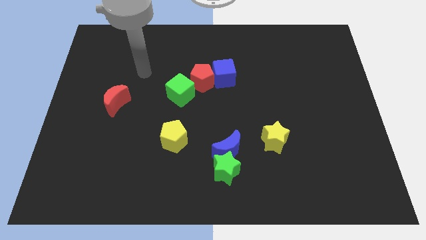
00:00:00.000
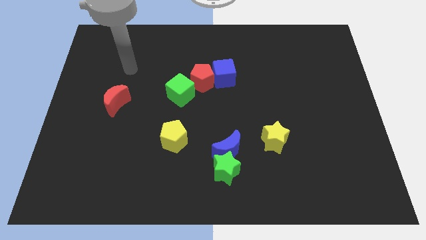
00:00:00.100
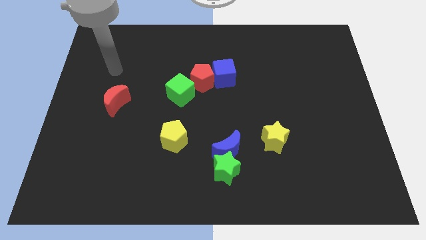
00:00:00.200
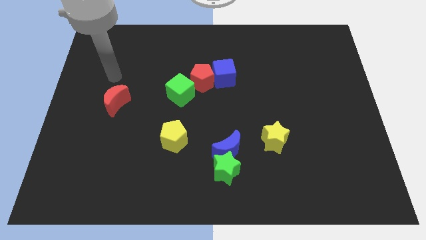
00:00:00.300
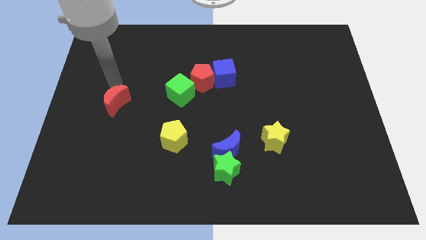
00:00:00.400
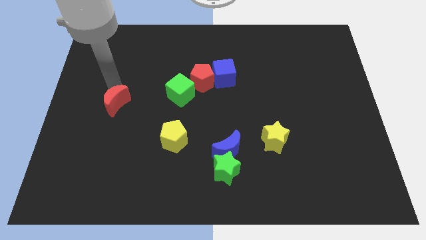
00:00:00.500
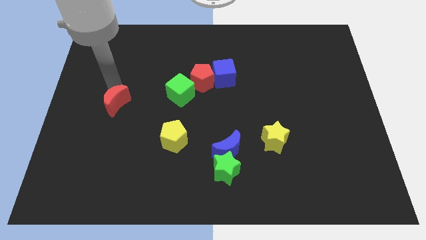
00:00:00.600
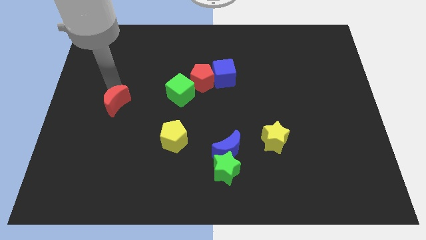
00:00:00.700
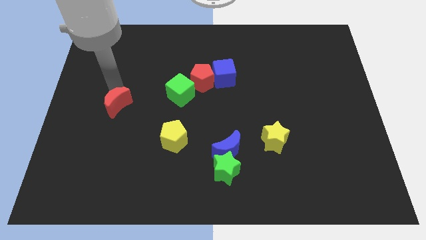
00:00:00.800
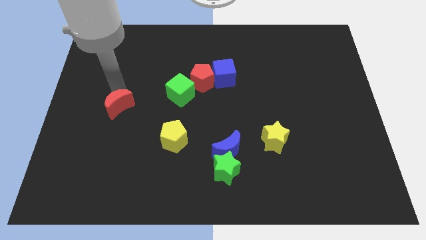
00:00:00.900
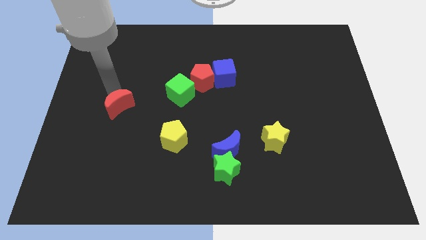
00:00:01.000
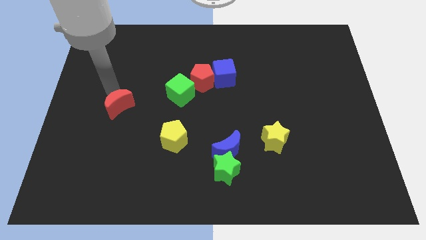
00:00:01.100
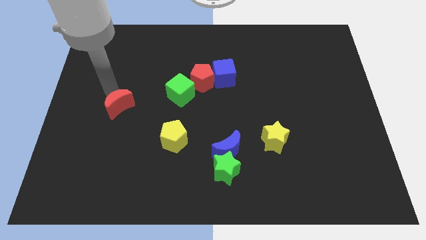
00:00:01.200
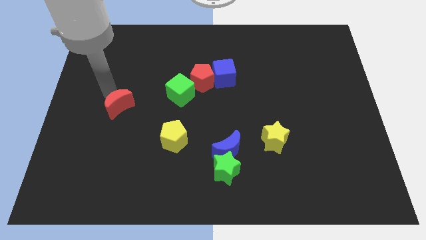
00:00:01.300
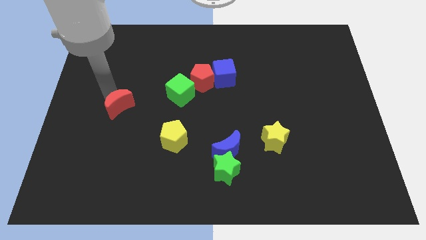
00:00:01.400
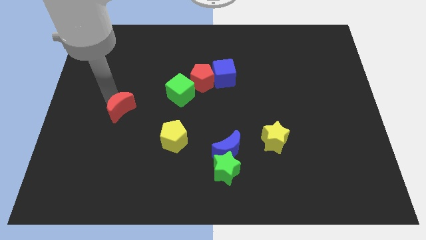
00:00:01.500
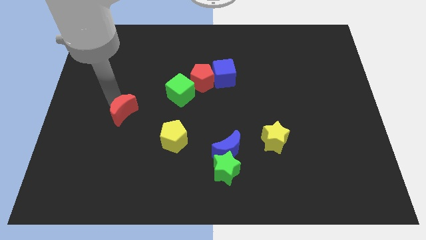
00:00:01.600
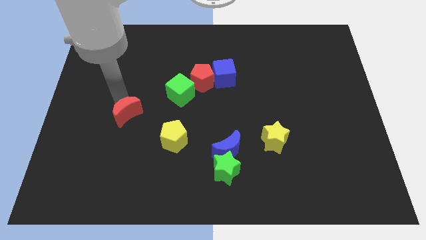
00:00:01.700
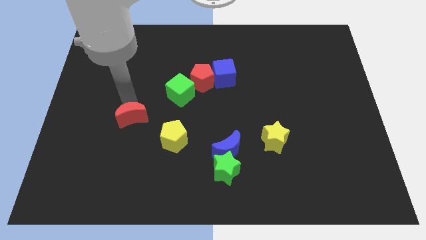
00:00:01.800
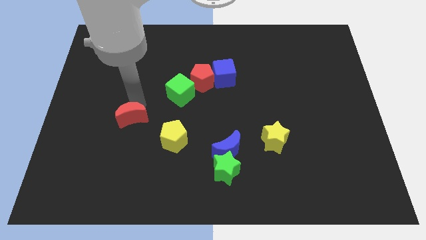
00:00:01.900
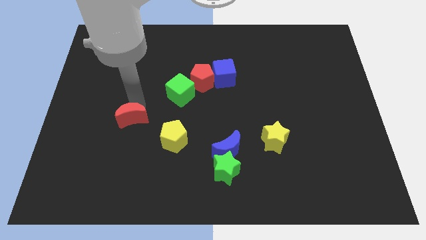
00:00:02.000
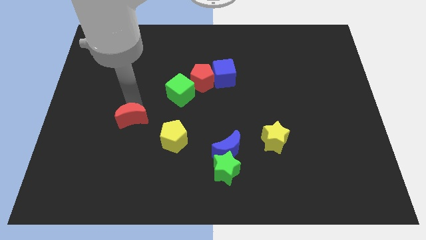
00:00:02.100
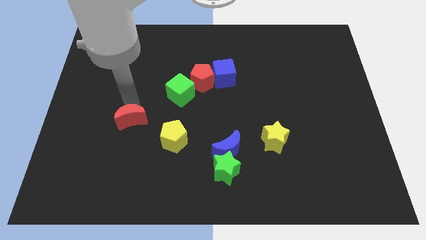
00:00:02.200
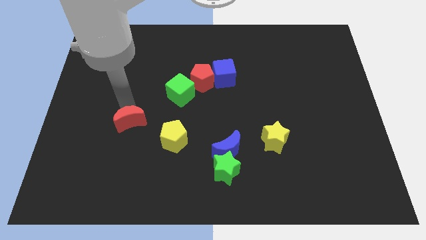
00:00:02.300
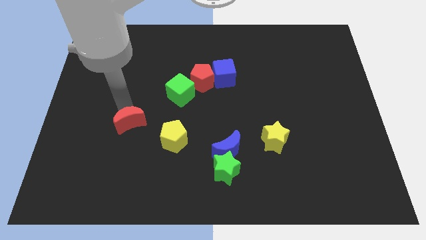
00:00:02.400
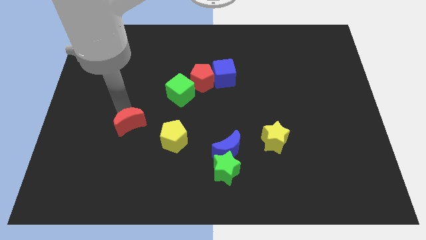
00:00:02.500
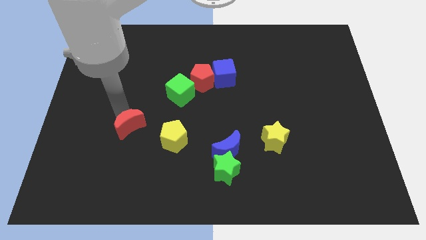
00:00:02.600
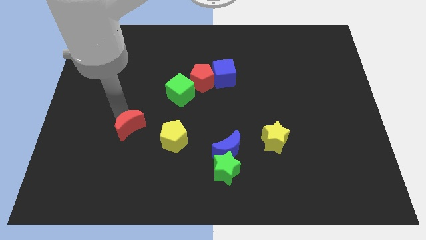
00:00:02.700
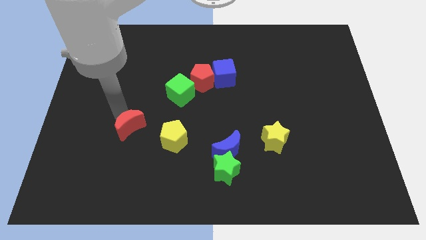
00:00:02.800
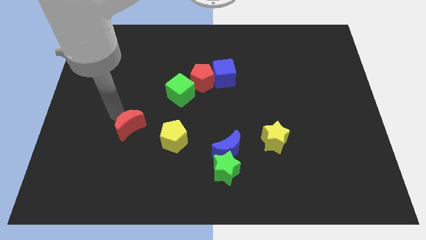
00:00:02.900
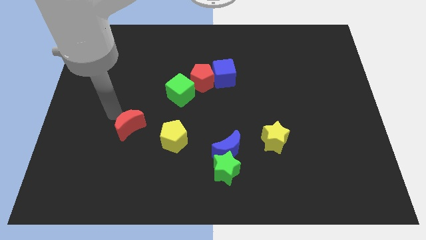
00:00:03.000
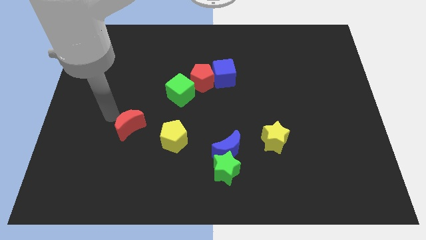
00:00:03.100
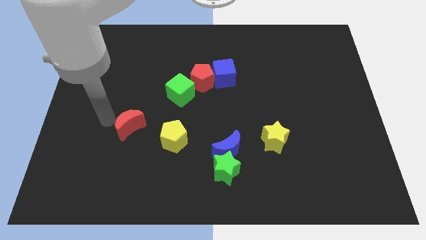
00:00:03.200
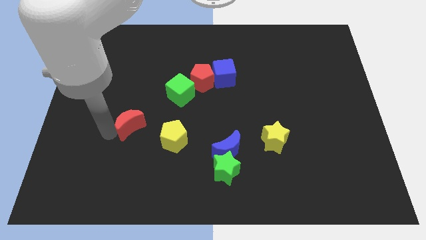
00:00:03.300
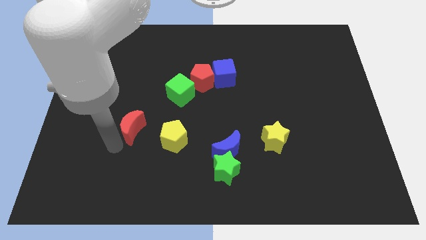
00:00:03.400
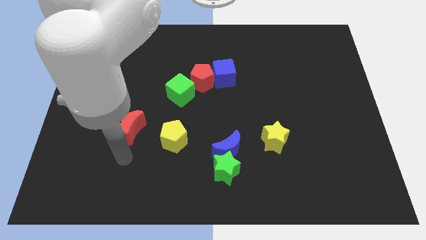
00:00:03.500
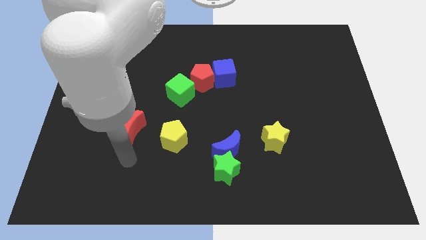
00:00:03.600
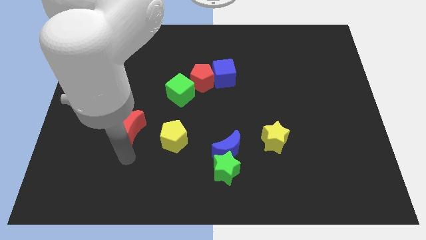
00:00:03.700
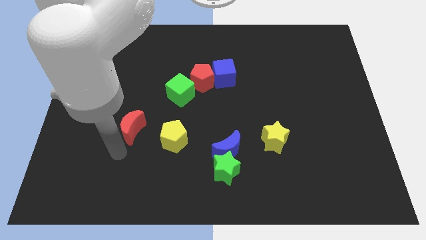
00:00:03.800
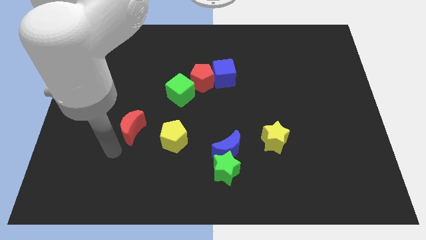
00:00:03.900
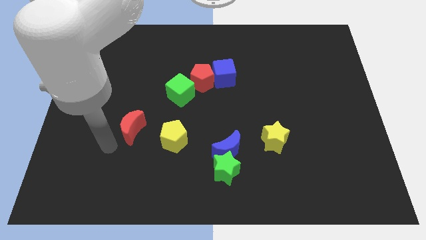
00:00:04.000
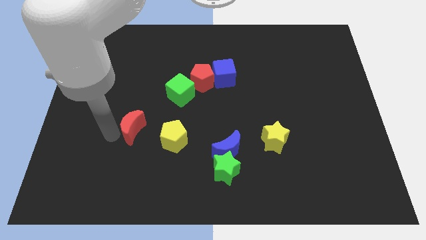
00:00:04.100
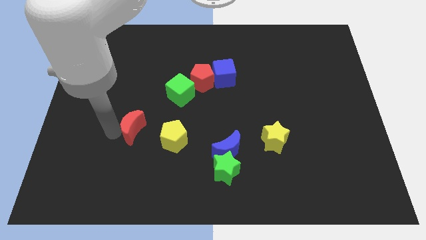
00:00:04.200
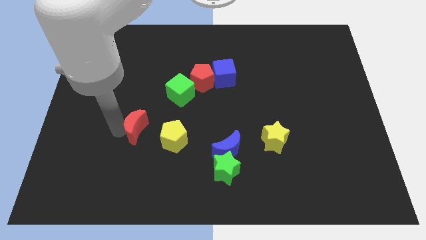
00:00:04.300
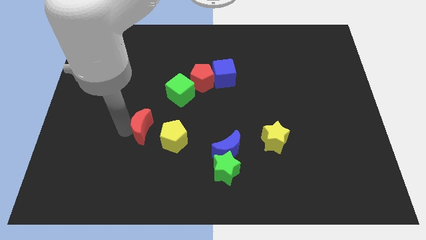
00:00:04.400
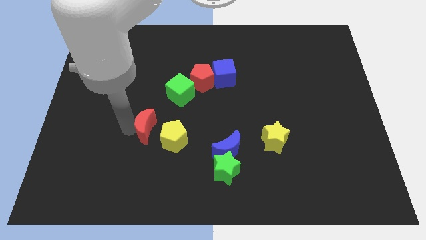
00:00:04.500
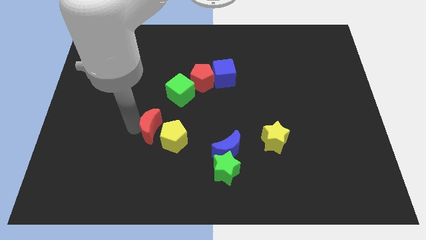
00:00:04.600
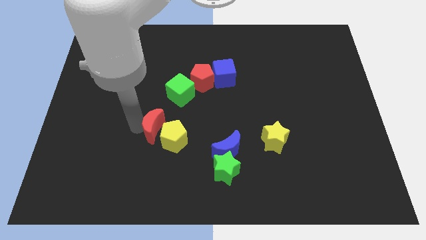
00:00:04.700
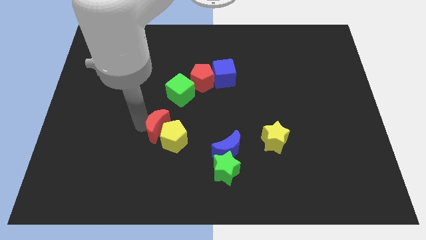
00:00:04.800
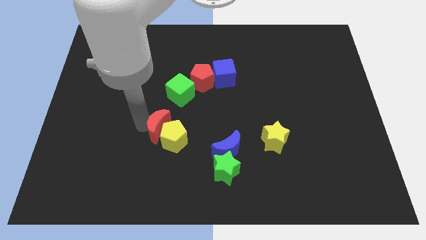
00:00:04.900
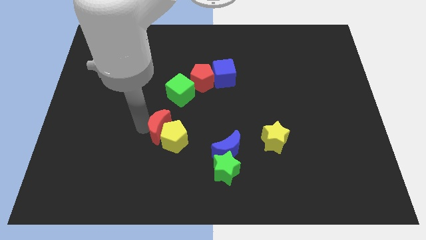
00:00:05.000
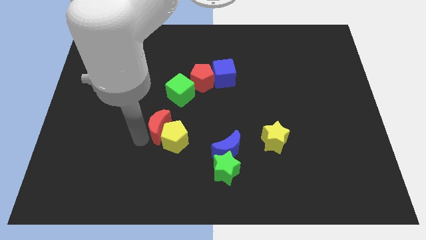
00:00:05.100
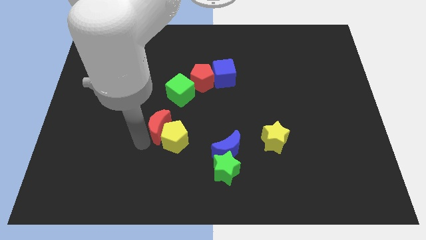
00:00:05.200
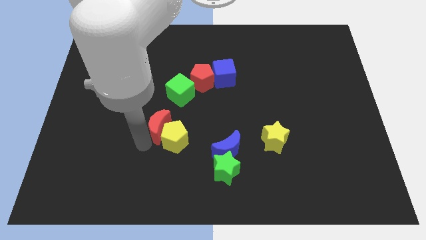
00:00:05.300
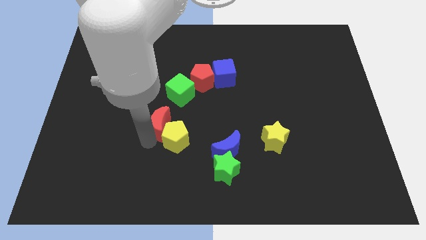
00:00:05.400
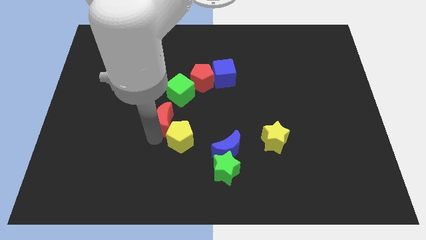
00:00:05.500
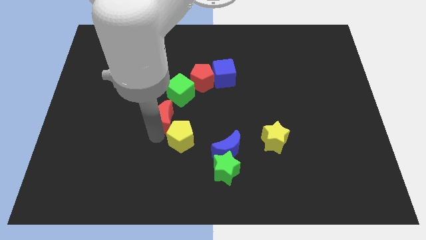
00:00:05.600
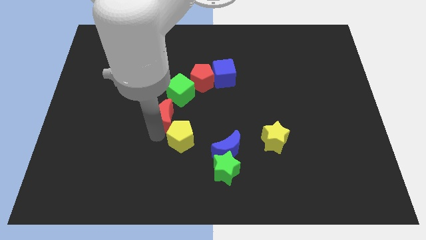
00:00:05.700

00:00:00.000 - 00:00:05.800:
push the red moon into the yellow pentagon

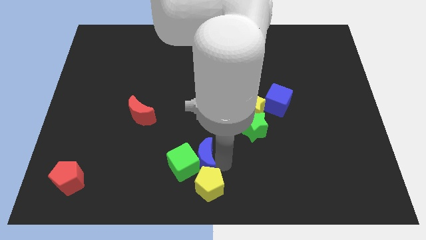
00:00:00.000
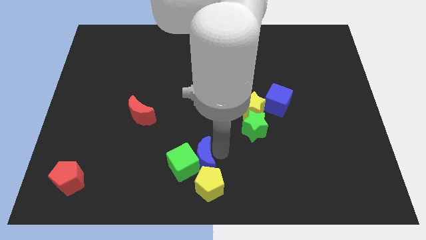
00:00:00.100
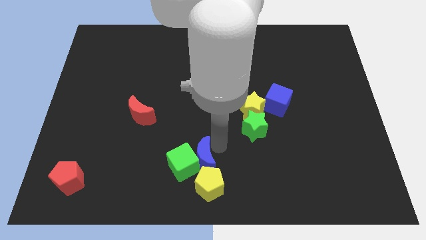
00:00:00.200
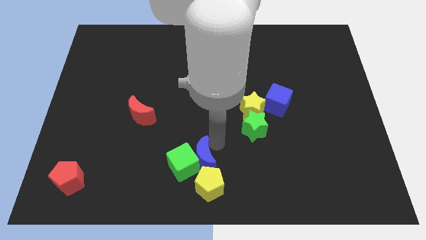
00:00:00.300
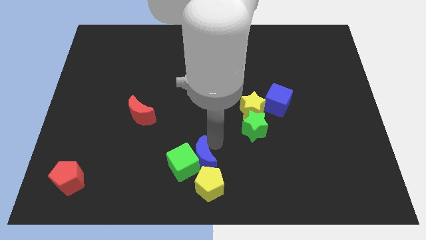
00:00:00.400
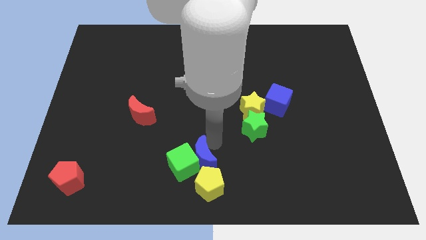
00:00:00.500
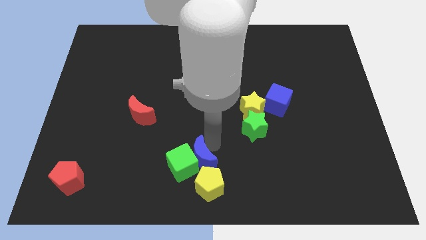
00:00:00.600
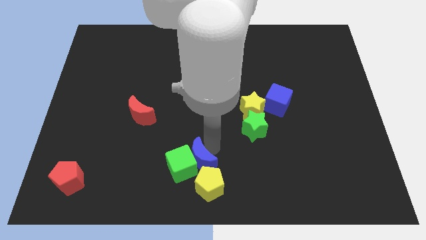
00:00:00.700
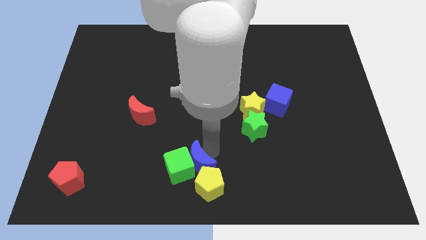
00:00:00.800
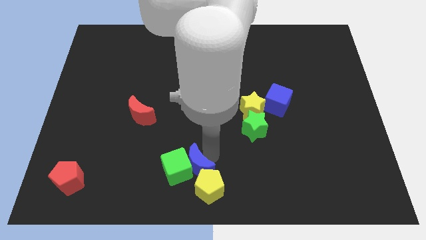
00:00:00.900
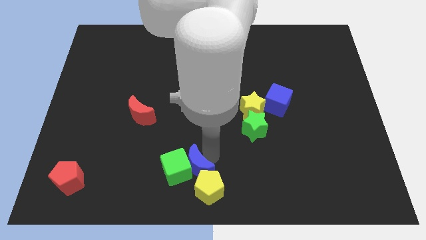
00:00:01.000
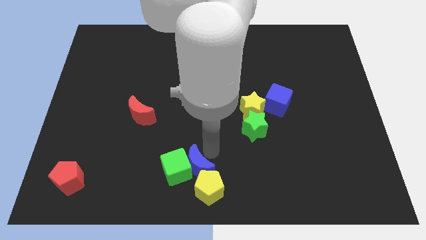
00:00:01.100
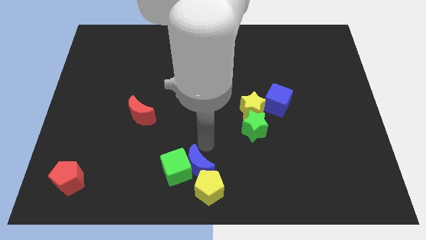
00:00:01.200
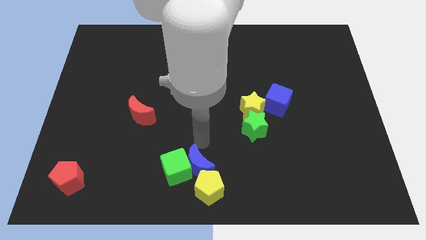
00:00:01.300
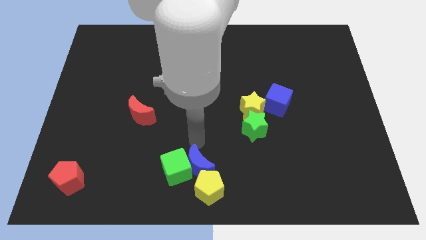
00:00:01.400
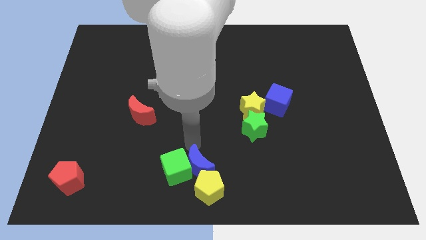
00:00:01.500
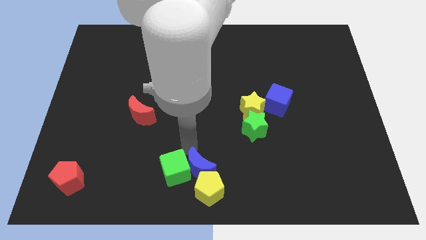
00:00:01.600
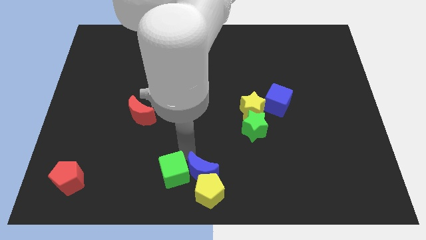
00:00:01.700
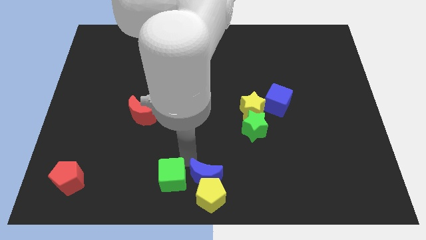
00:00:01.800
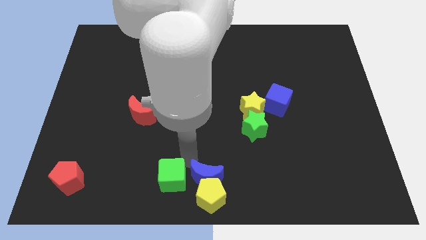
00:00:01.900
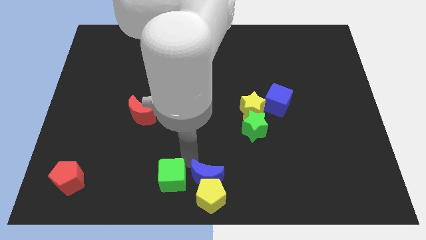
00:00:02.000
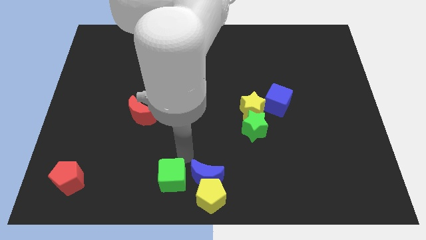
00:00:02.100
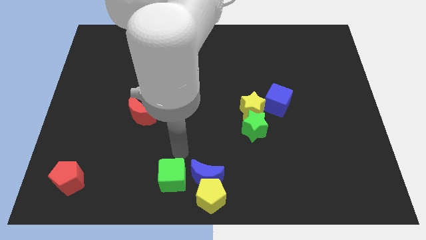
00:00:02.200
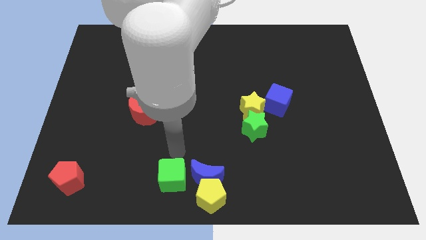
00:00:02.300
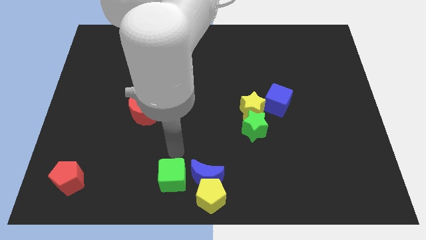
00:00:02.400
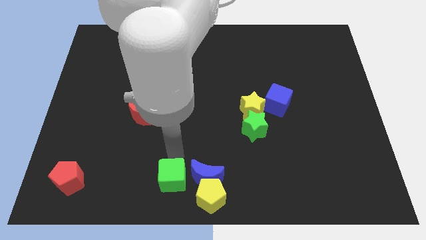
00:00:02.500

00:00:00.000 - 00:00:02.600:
place the arm above the green cube

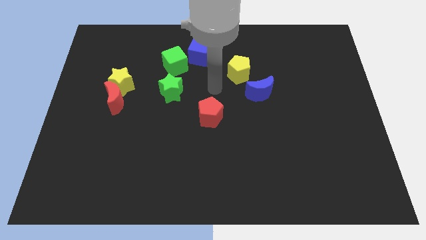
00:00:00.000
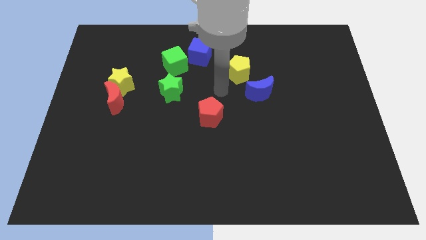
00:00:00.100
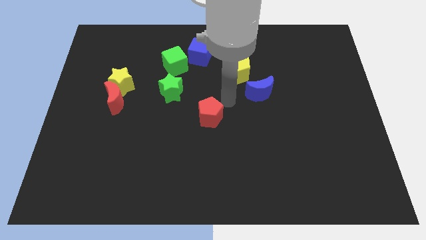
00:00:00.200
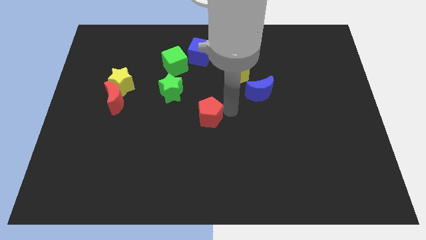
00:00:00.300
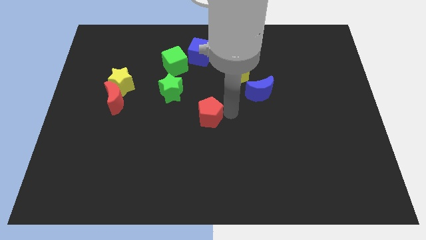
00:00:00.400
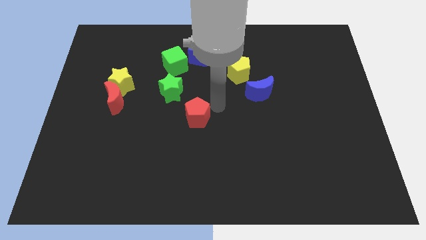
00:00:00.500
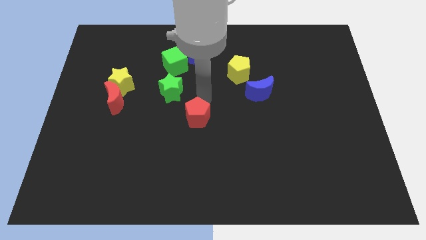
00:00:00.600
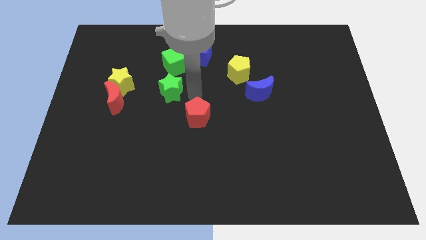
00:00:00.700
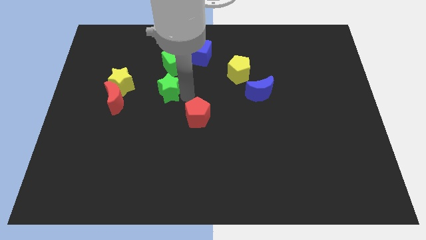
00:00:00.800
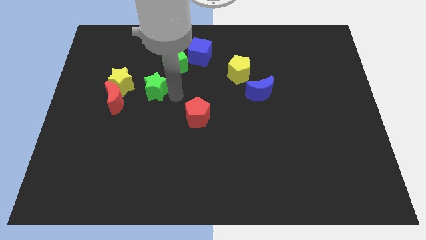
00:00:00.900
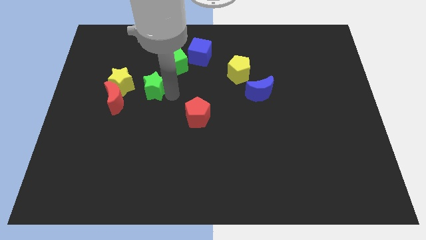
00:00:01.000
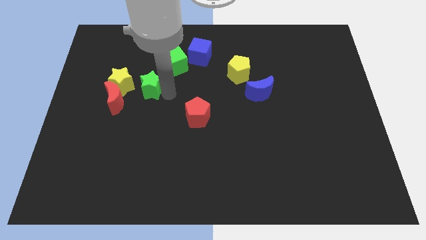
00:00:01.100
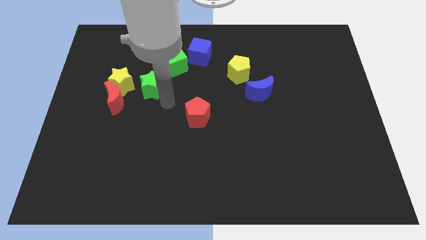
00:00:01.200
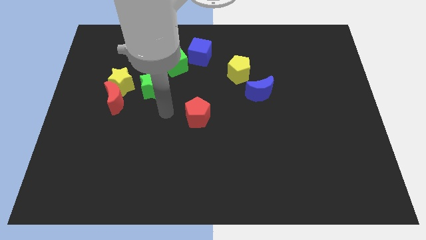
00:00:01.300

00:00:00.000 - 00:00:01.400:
move the green star towards the yellow star
